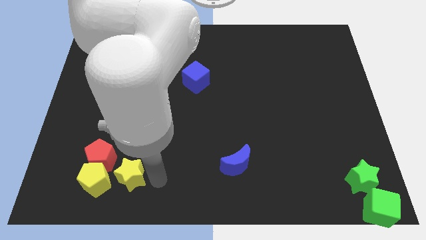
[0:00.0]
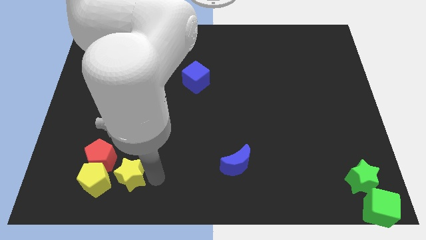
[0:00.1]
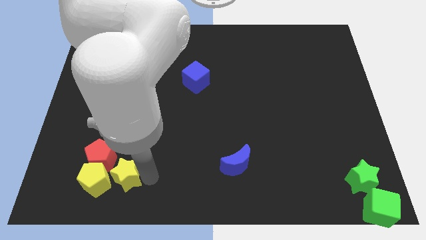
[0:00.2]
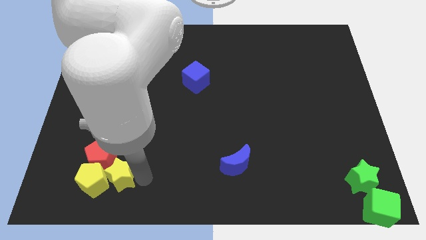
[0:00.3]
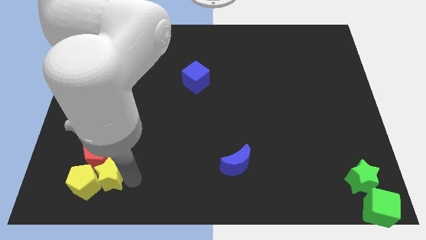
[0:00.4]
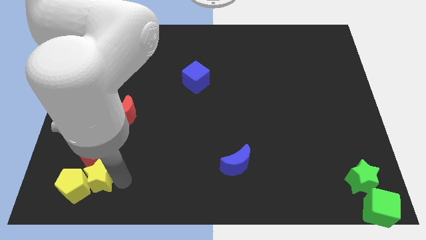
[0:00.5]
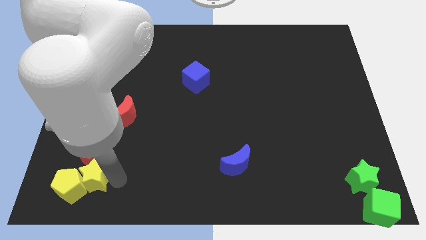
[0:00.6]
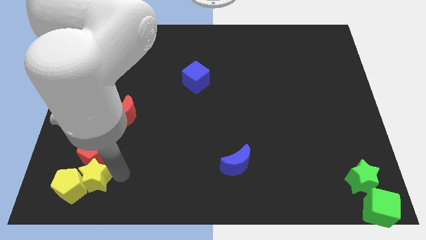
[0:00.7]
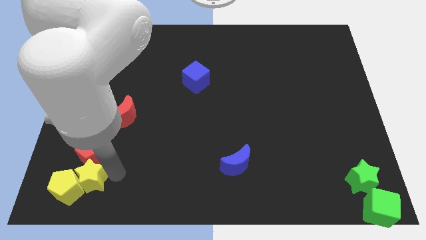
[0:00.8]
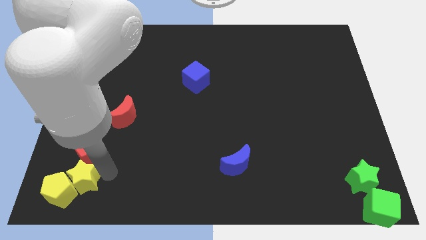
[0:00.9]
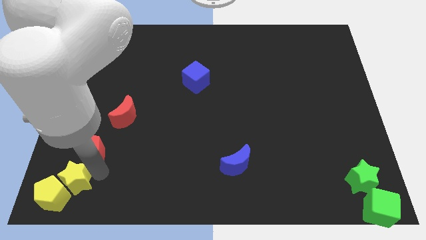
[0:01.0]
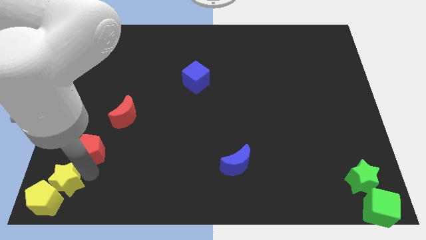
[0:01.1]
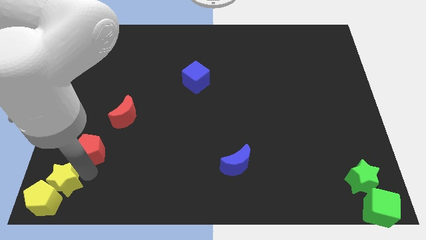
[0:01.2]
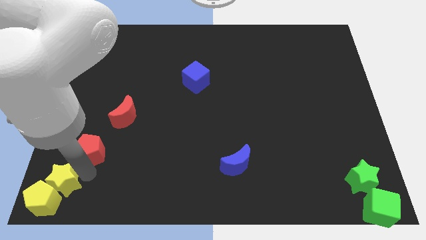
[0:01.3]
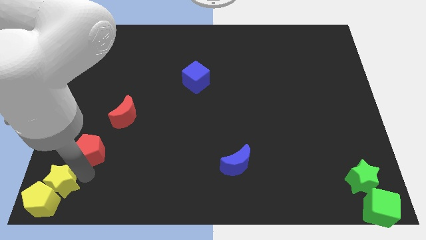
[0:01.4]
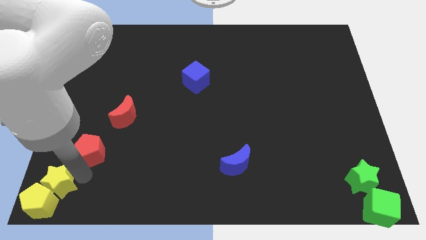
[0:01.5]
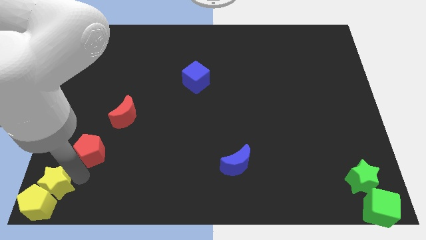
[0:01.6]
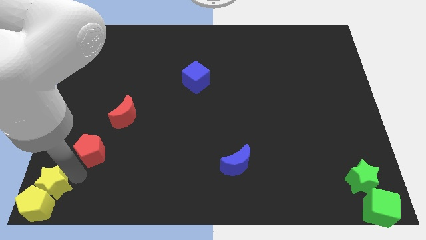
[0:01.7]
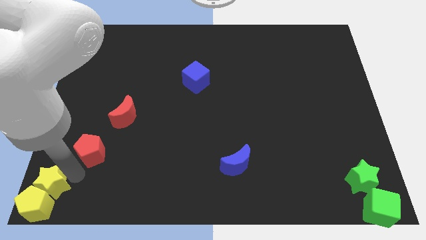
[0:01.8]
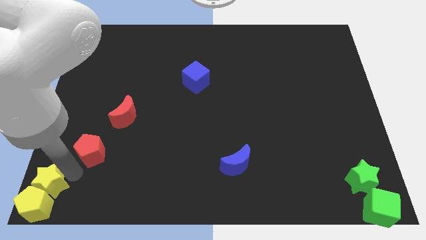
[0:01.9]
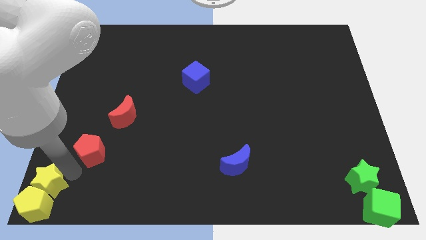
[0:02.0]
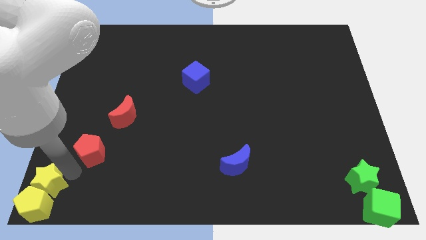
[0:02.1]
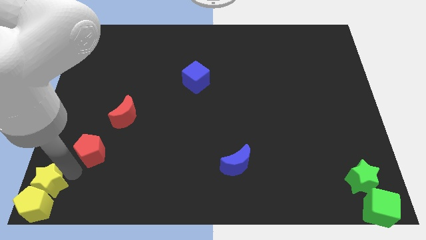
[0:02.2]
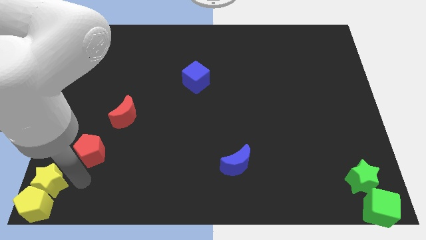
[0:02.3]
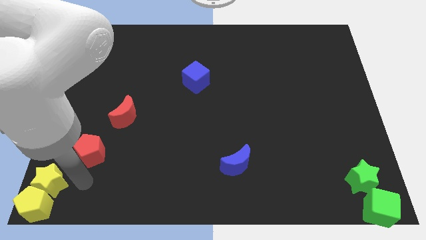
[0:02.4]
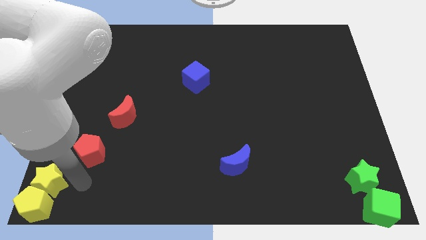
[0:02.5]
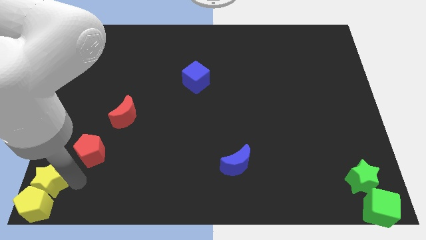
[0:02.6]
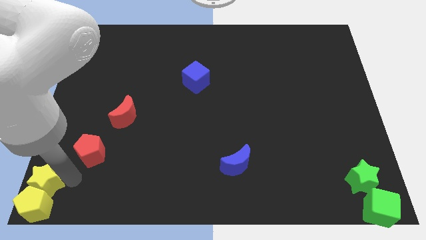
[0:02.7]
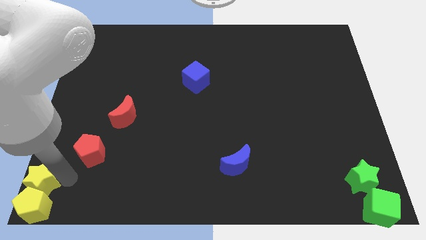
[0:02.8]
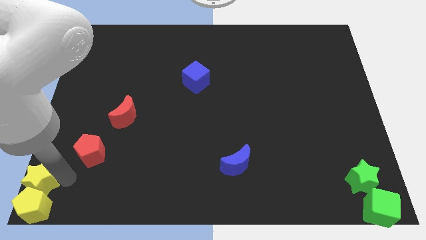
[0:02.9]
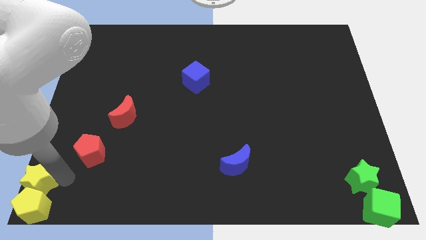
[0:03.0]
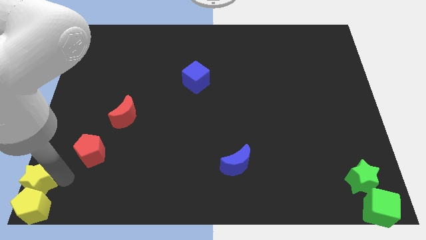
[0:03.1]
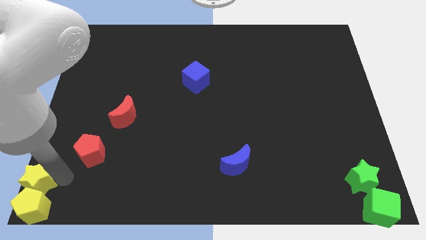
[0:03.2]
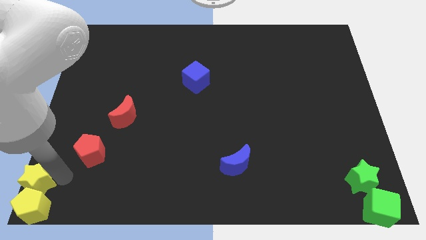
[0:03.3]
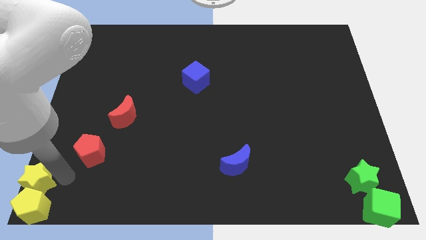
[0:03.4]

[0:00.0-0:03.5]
move the yellow star and yellow pentagon to the bottom left corner side

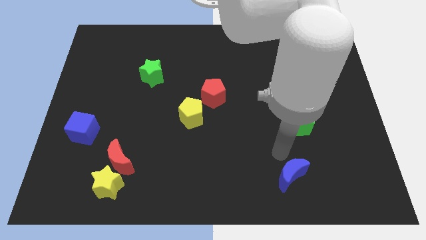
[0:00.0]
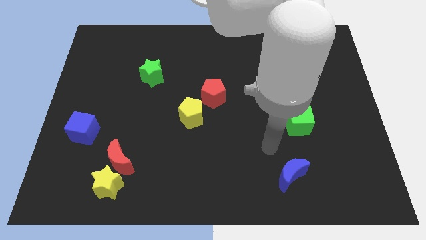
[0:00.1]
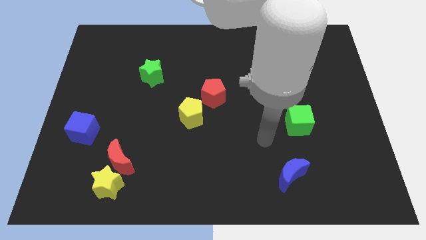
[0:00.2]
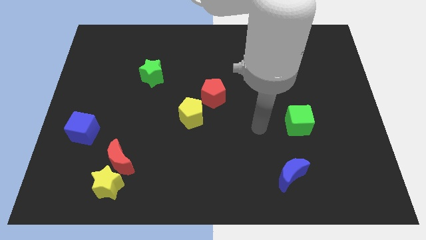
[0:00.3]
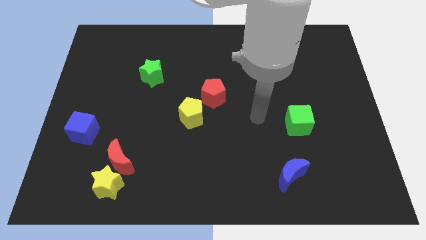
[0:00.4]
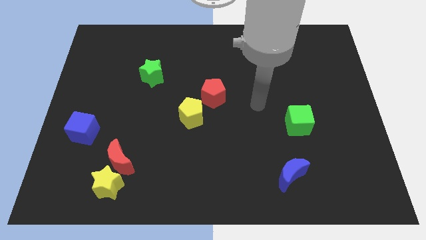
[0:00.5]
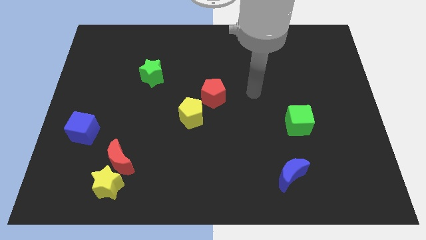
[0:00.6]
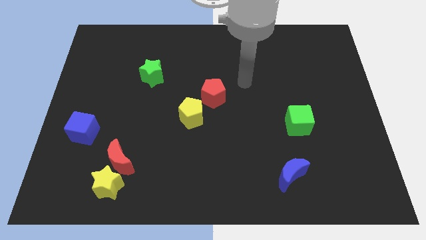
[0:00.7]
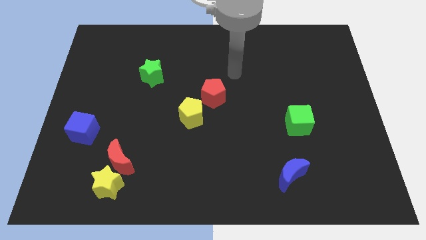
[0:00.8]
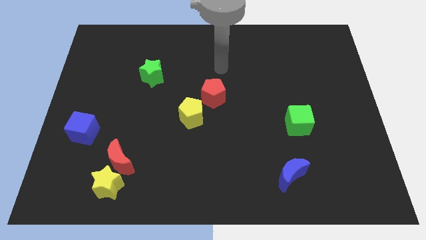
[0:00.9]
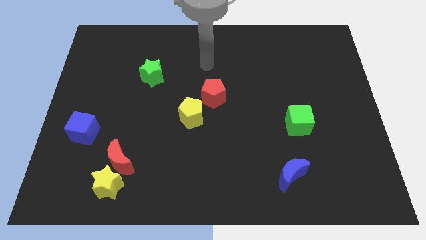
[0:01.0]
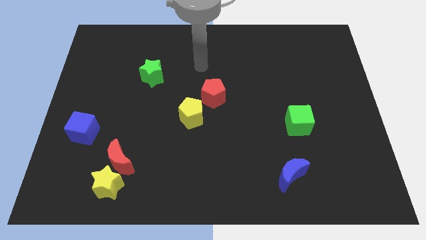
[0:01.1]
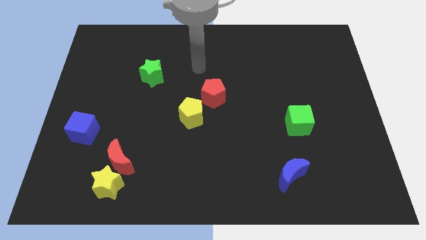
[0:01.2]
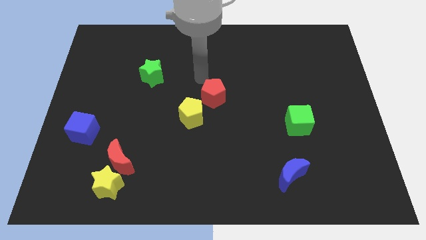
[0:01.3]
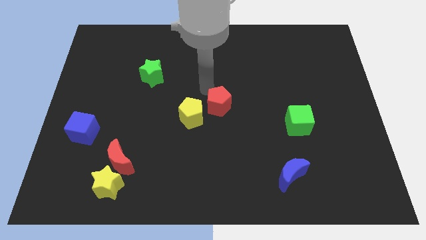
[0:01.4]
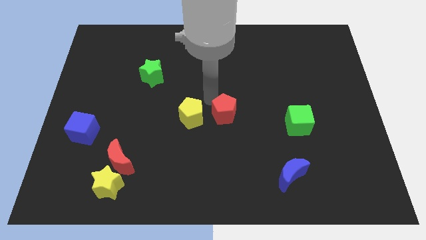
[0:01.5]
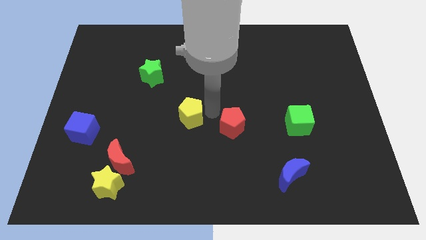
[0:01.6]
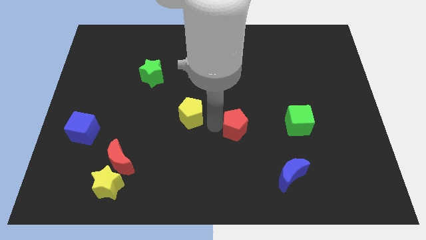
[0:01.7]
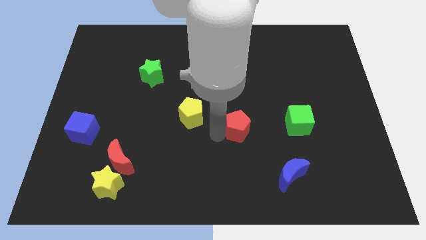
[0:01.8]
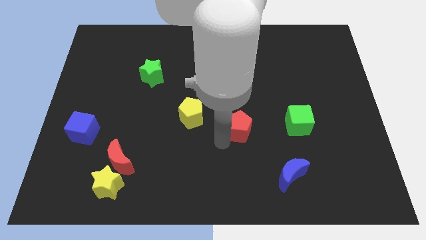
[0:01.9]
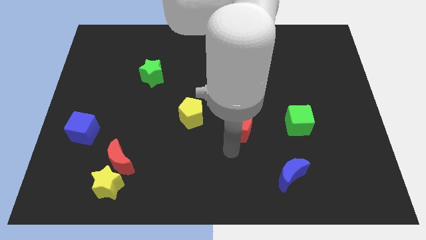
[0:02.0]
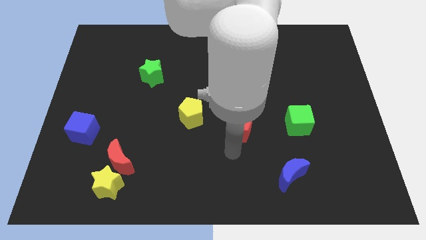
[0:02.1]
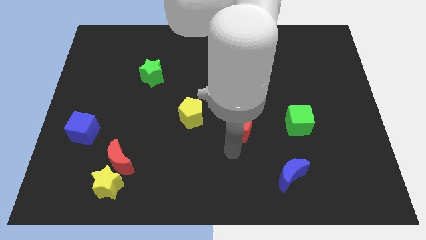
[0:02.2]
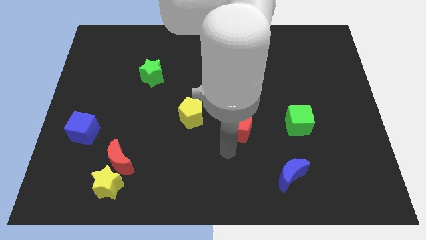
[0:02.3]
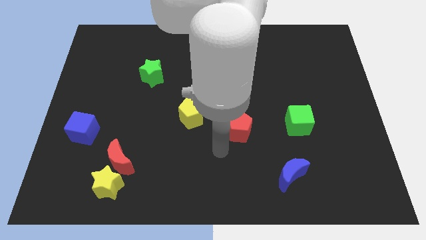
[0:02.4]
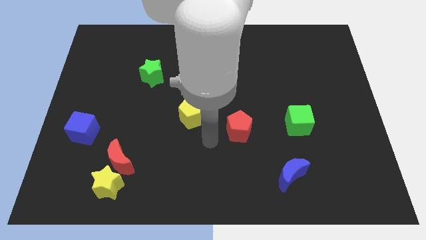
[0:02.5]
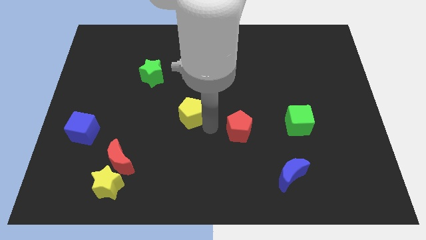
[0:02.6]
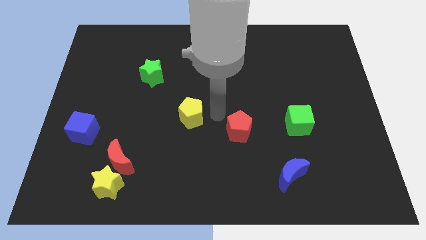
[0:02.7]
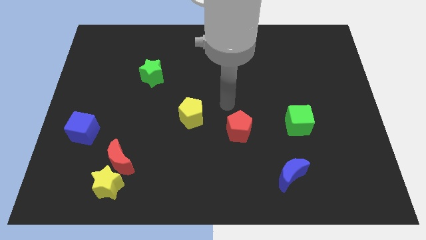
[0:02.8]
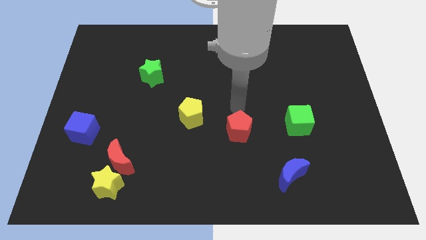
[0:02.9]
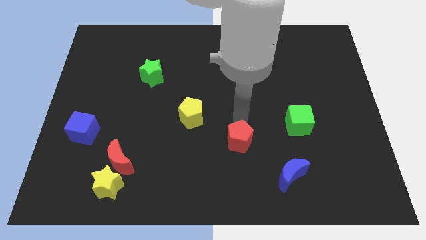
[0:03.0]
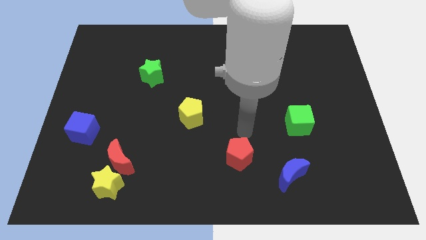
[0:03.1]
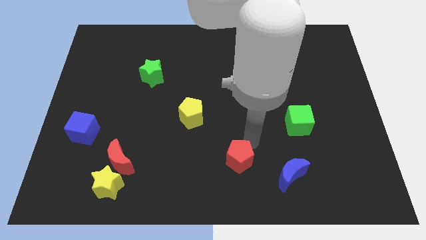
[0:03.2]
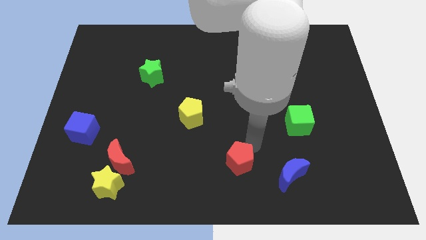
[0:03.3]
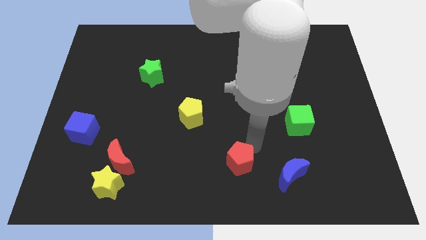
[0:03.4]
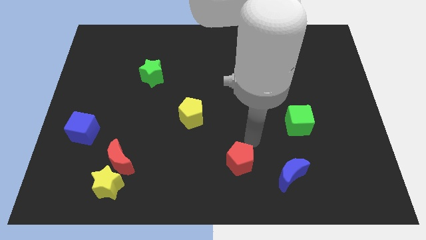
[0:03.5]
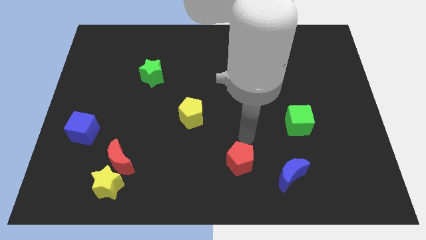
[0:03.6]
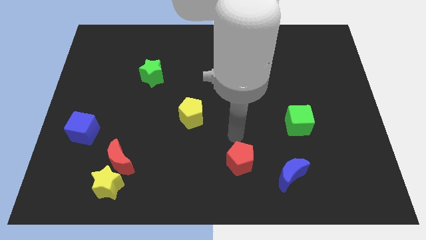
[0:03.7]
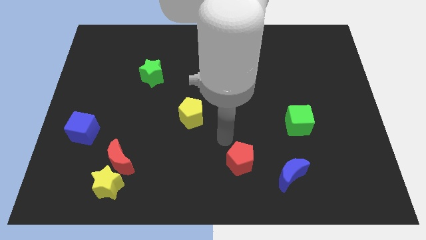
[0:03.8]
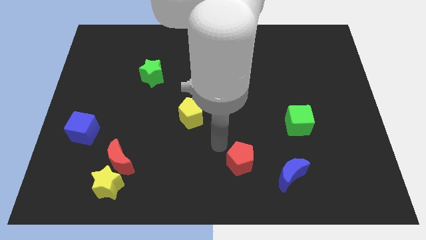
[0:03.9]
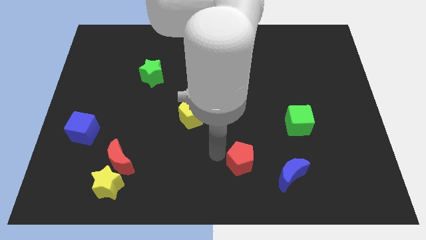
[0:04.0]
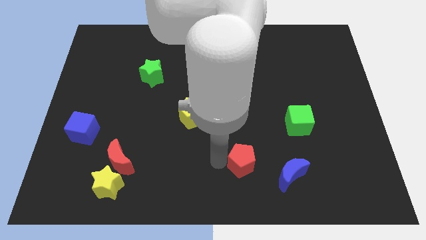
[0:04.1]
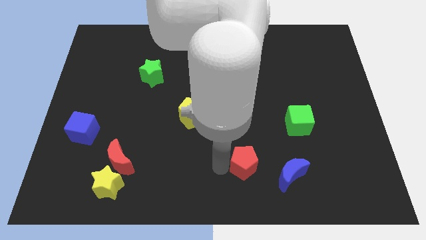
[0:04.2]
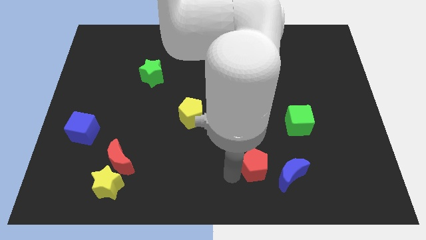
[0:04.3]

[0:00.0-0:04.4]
push the red pentagon to the left of the blue moon

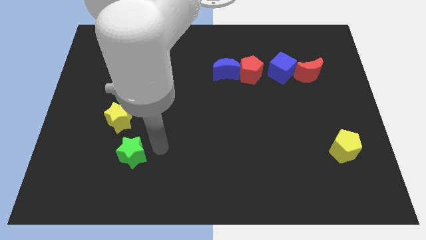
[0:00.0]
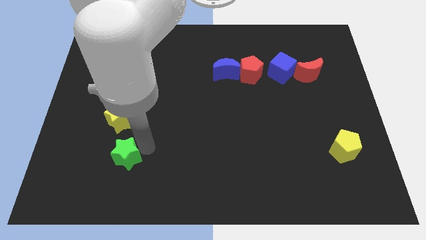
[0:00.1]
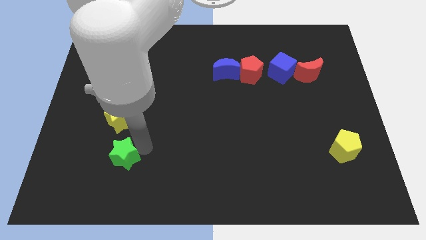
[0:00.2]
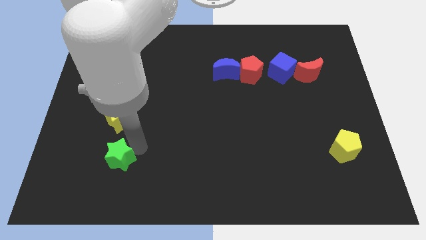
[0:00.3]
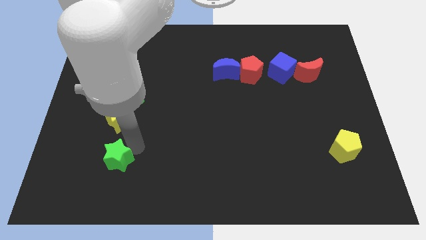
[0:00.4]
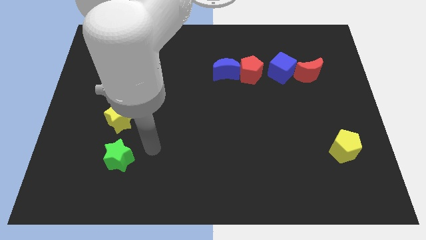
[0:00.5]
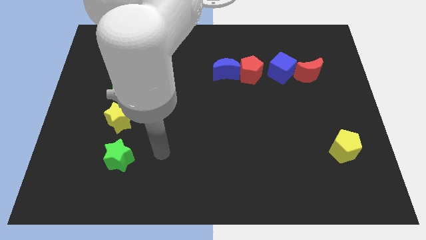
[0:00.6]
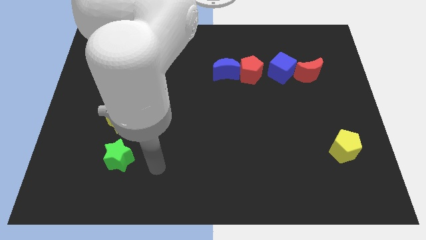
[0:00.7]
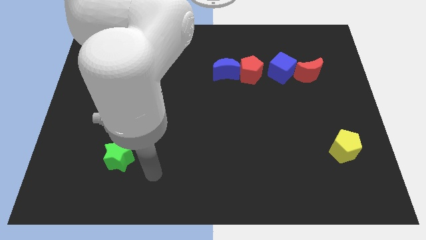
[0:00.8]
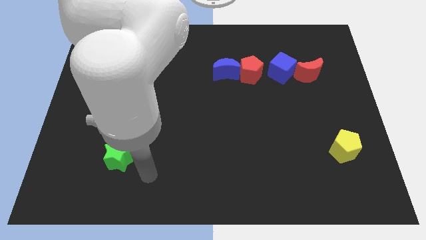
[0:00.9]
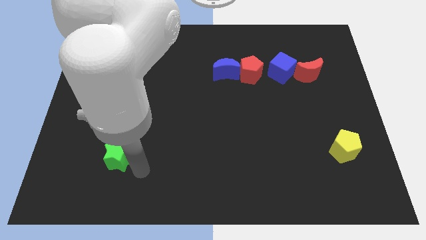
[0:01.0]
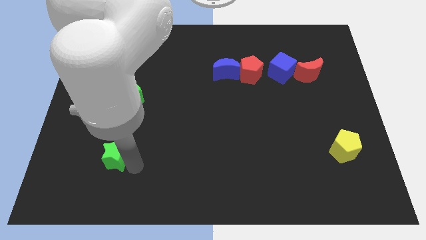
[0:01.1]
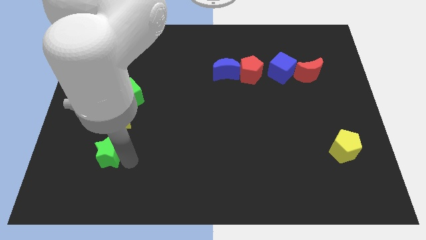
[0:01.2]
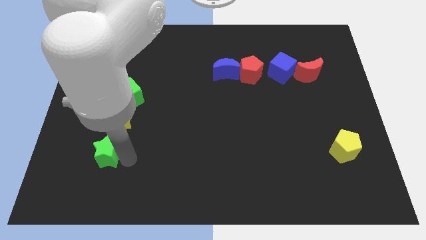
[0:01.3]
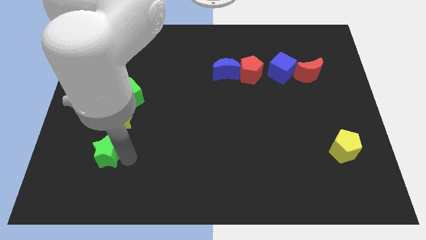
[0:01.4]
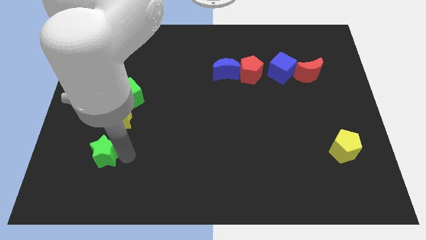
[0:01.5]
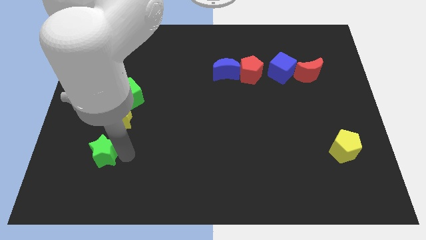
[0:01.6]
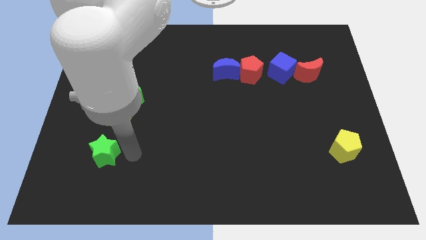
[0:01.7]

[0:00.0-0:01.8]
move the green star in a vertical line
